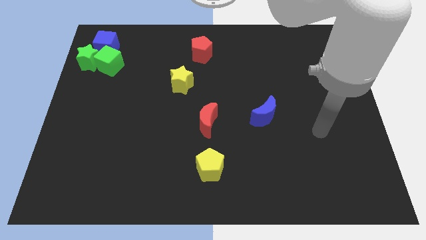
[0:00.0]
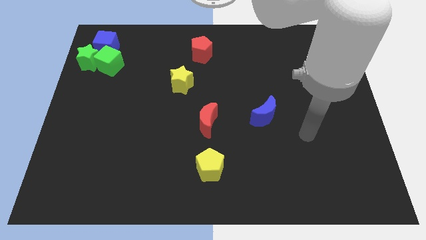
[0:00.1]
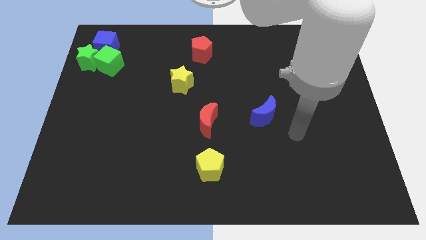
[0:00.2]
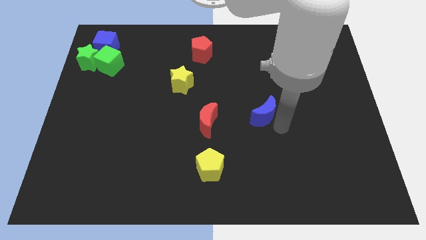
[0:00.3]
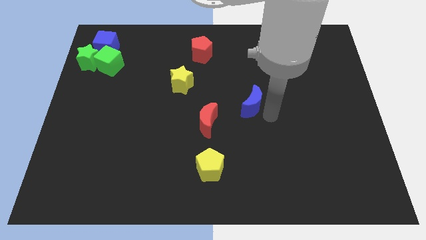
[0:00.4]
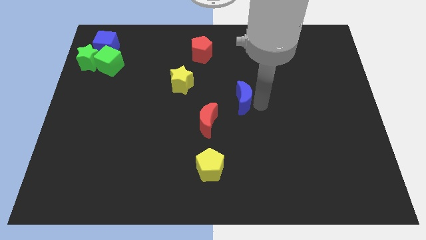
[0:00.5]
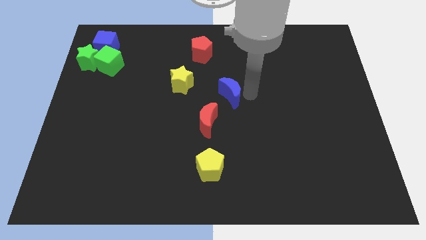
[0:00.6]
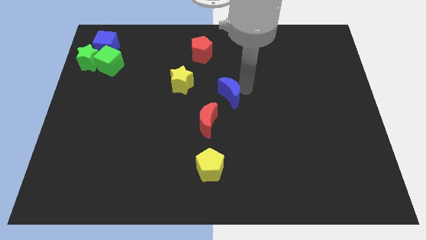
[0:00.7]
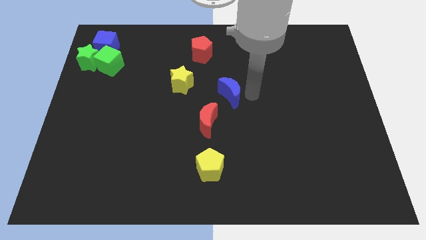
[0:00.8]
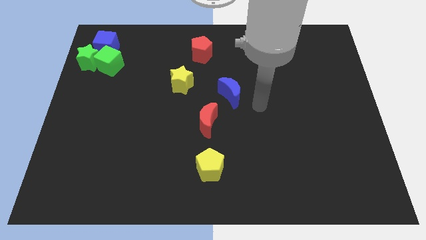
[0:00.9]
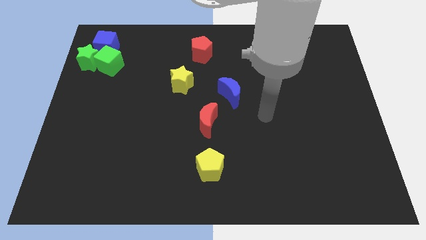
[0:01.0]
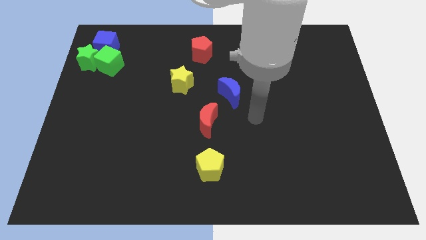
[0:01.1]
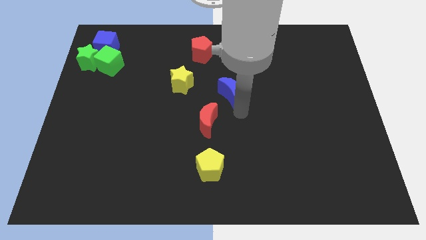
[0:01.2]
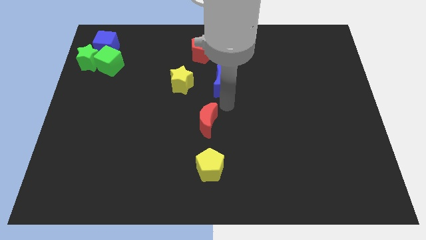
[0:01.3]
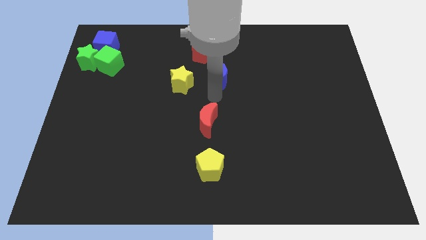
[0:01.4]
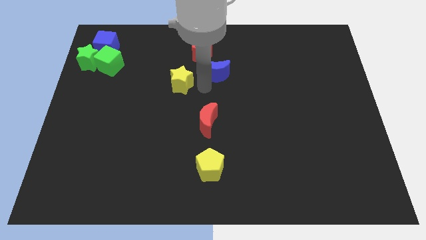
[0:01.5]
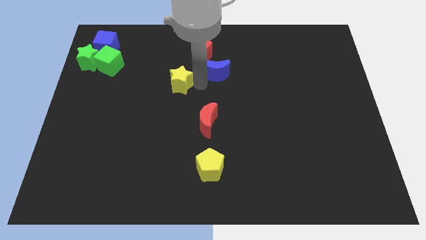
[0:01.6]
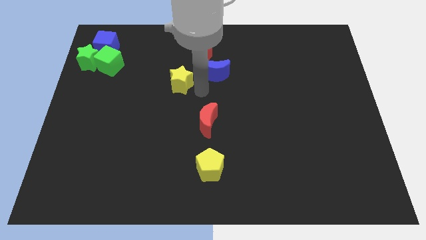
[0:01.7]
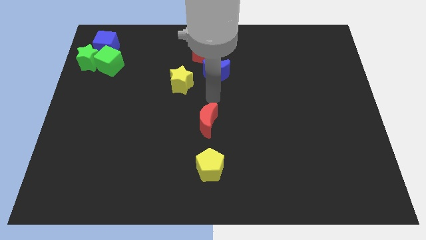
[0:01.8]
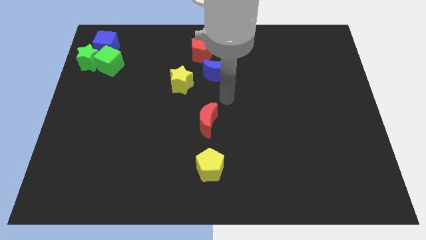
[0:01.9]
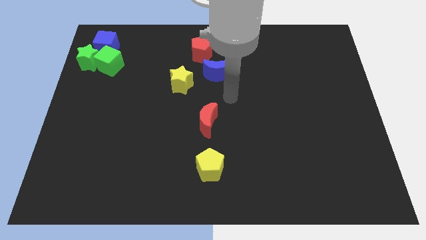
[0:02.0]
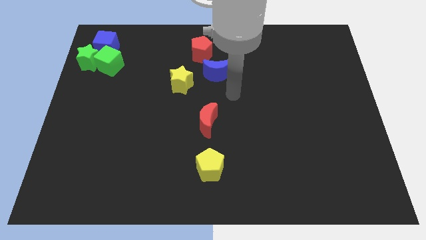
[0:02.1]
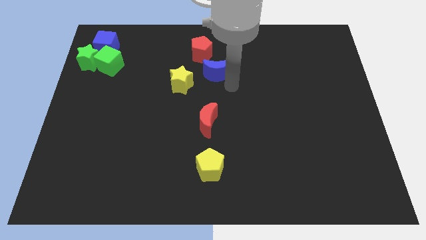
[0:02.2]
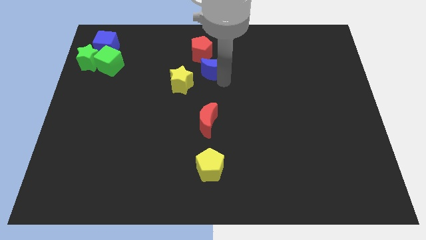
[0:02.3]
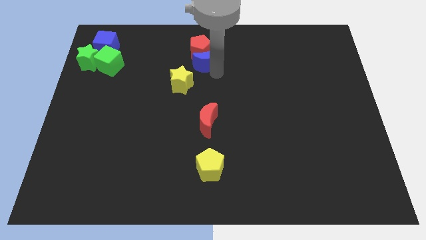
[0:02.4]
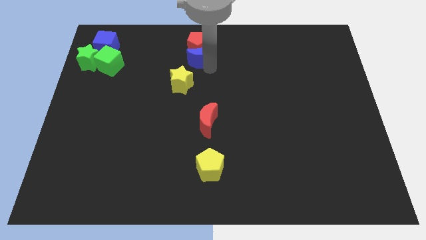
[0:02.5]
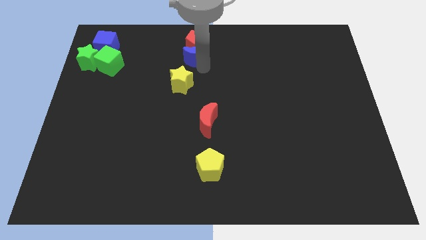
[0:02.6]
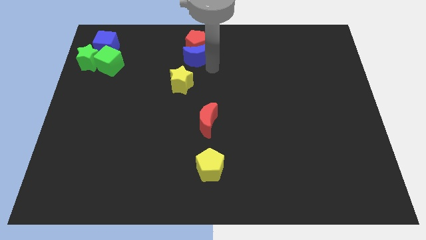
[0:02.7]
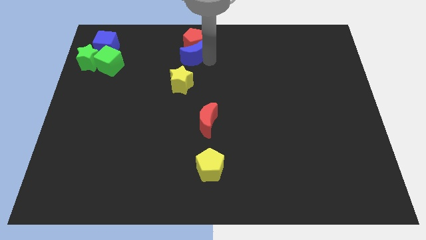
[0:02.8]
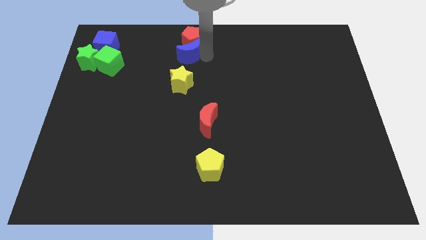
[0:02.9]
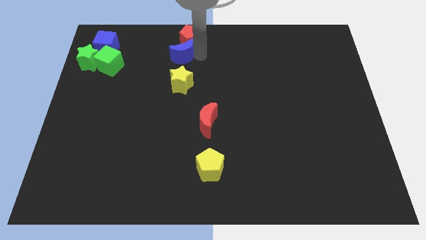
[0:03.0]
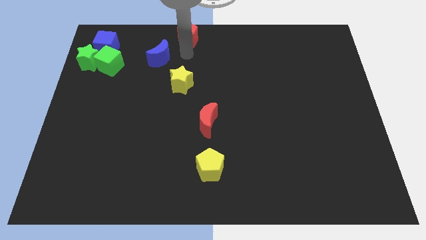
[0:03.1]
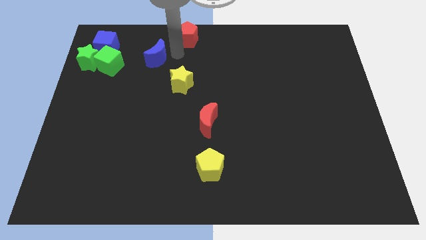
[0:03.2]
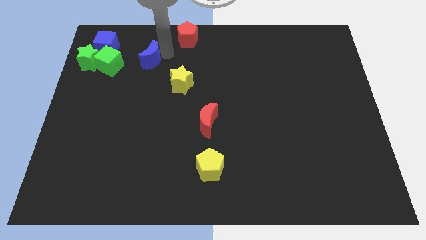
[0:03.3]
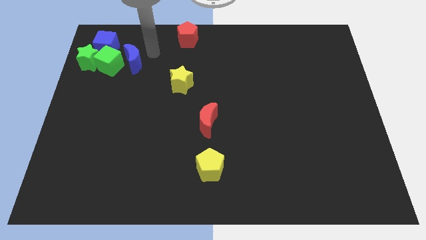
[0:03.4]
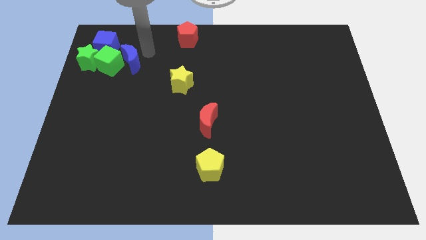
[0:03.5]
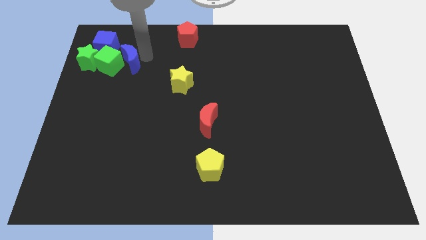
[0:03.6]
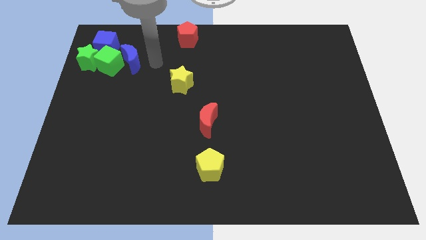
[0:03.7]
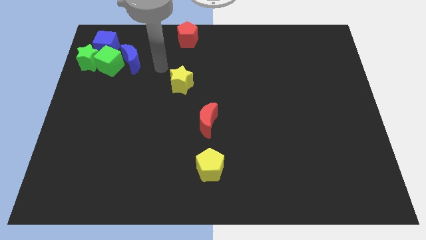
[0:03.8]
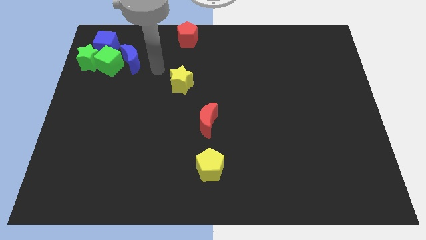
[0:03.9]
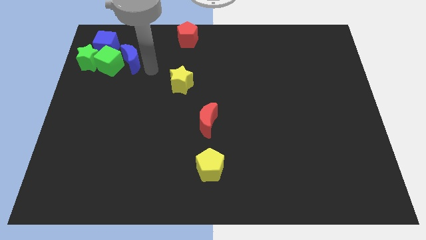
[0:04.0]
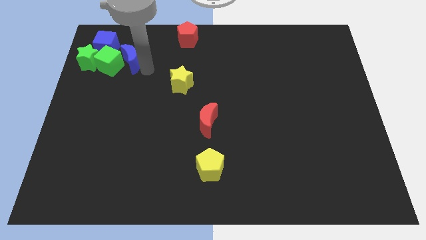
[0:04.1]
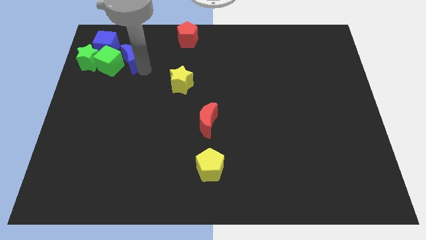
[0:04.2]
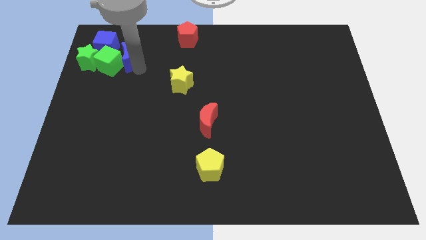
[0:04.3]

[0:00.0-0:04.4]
push the blue crescent right to the green cube

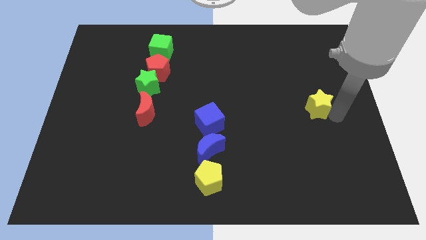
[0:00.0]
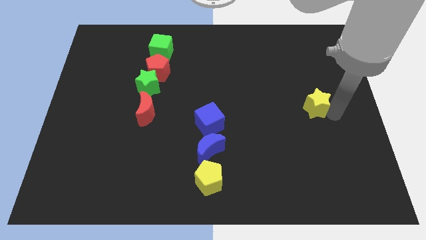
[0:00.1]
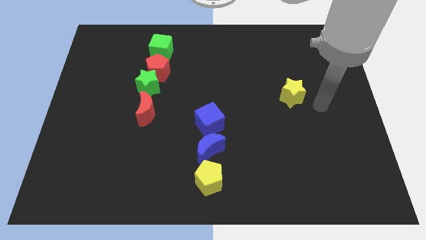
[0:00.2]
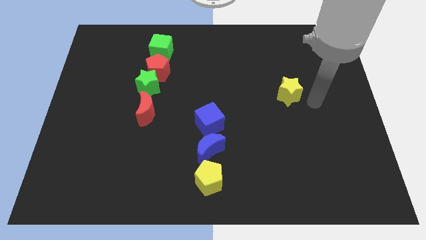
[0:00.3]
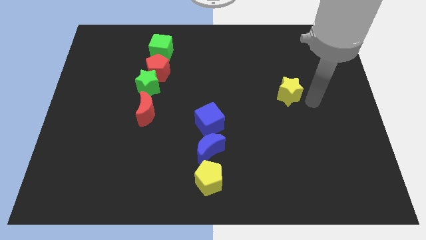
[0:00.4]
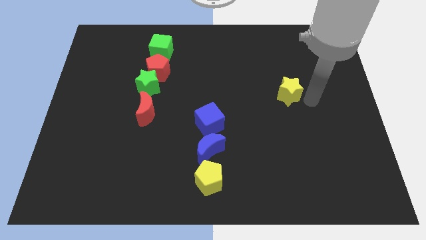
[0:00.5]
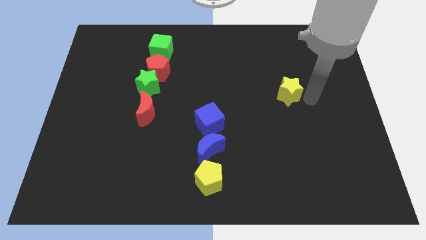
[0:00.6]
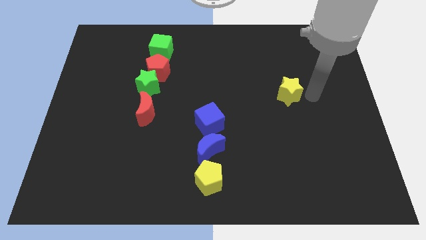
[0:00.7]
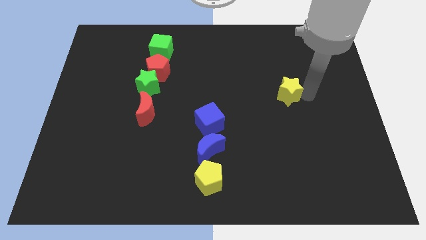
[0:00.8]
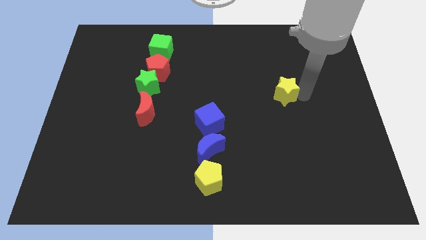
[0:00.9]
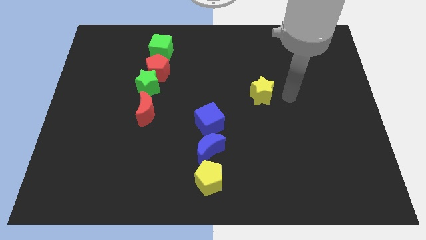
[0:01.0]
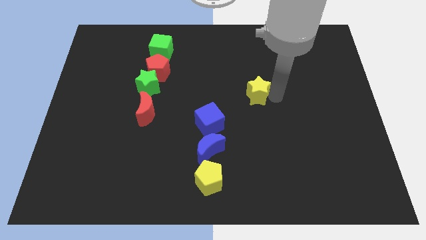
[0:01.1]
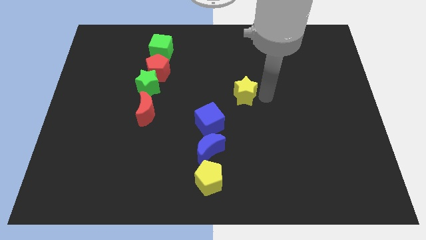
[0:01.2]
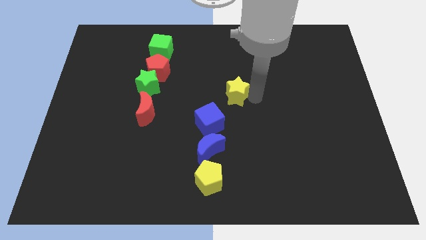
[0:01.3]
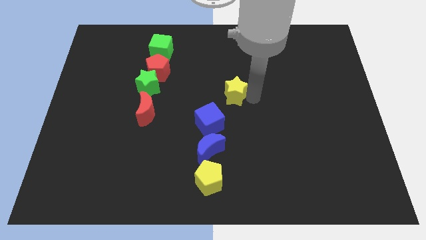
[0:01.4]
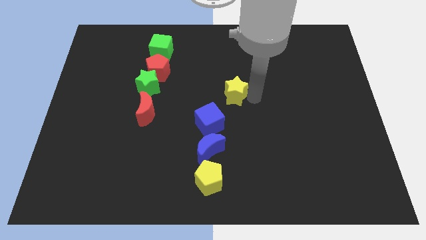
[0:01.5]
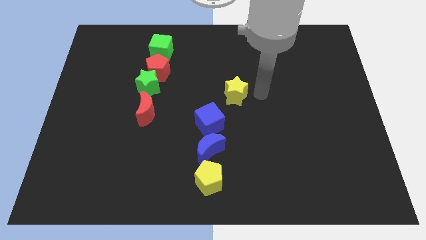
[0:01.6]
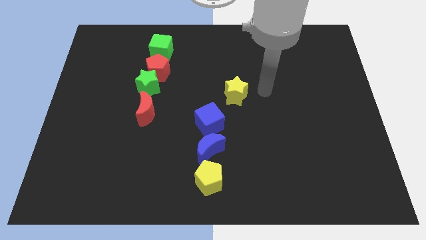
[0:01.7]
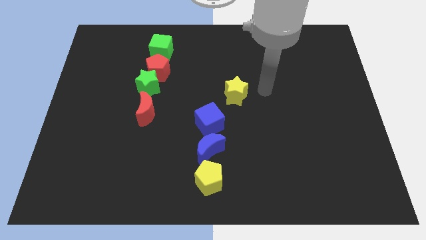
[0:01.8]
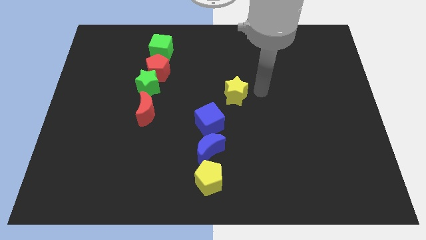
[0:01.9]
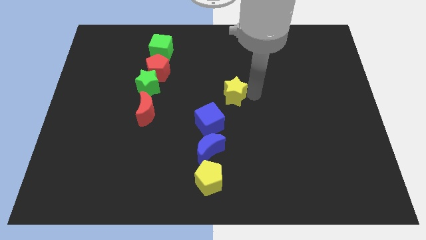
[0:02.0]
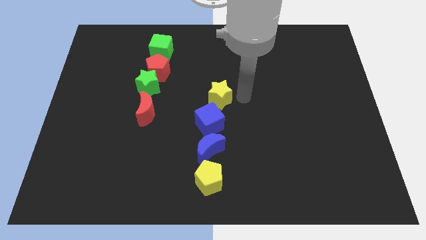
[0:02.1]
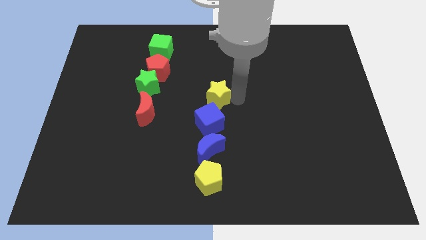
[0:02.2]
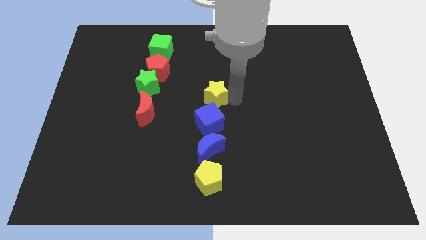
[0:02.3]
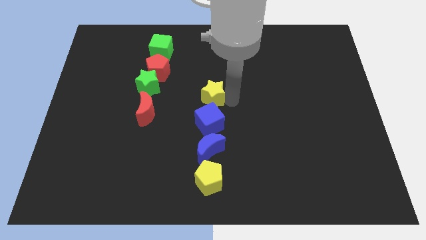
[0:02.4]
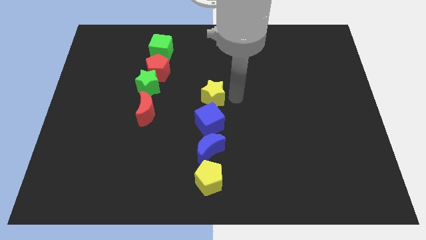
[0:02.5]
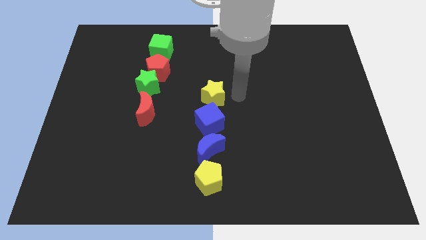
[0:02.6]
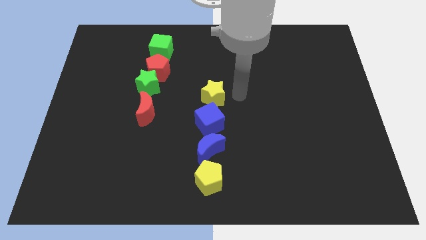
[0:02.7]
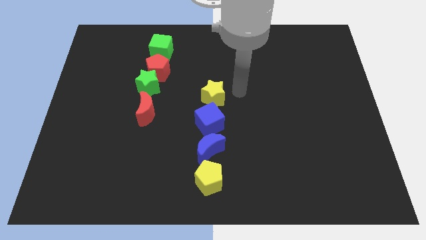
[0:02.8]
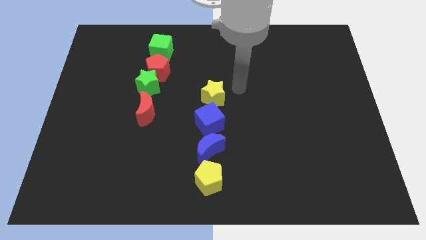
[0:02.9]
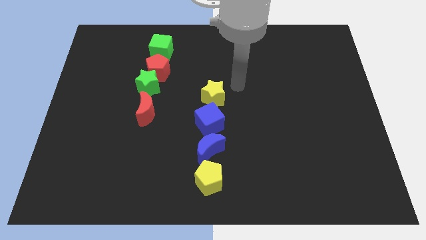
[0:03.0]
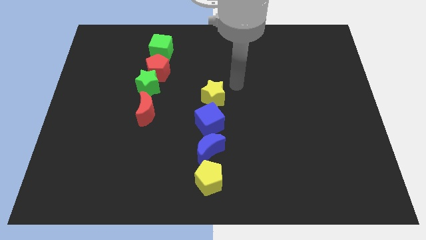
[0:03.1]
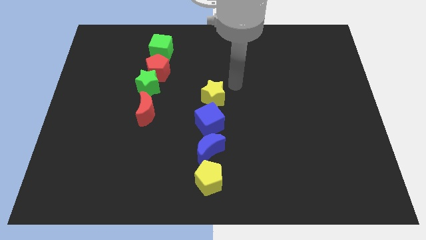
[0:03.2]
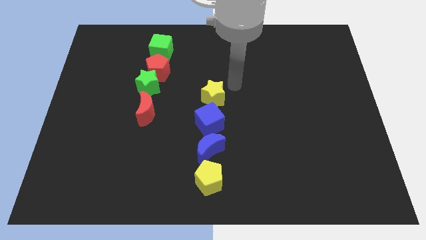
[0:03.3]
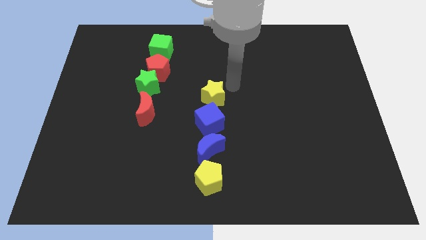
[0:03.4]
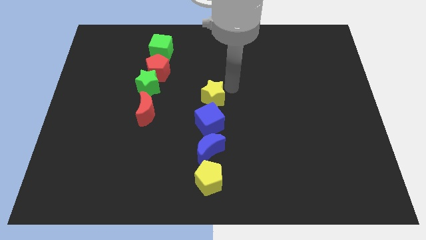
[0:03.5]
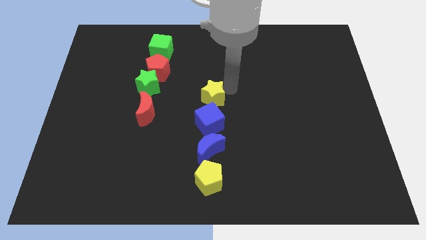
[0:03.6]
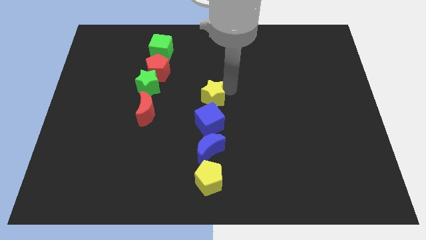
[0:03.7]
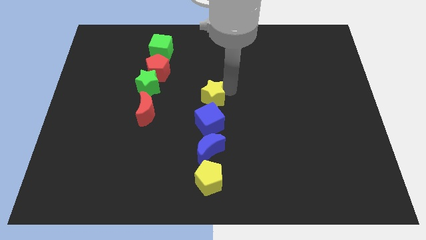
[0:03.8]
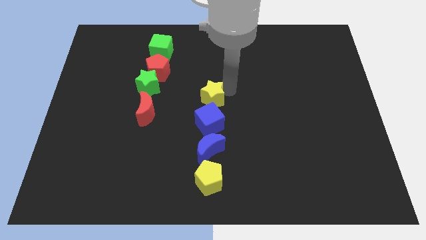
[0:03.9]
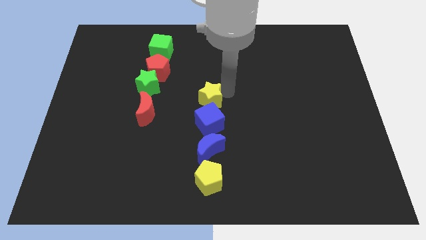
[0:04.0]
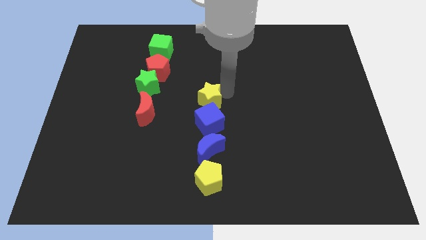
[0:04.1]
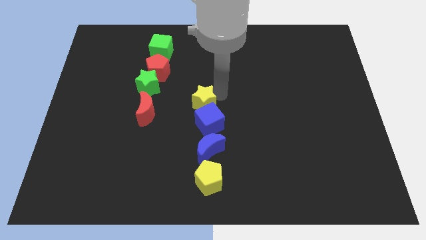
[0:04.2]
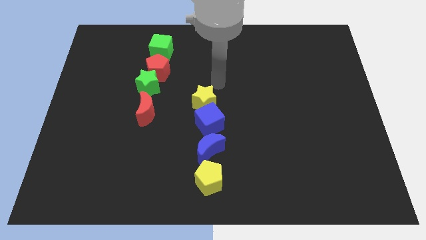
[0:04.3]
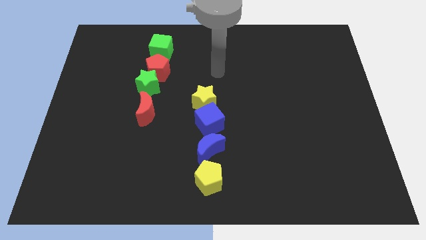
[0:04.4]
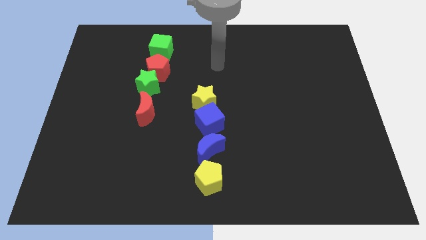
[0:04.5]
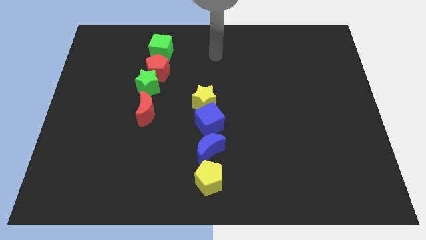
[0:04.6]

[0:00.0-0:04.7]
place the yellow star above the blue cube

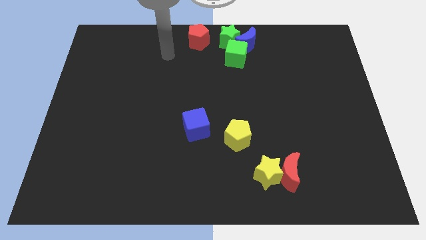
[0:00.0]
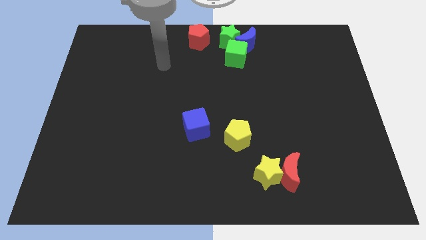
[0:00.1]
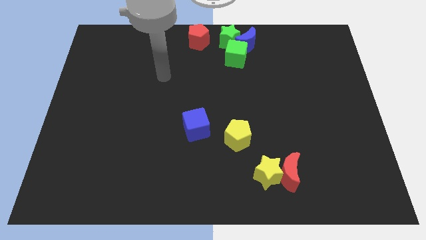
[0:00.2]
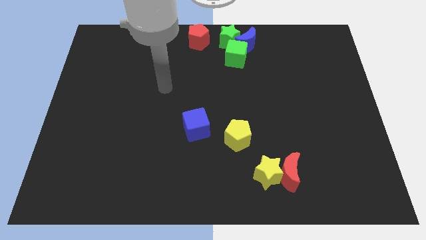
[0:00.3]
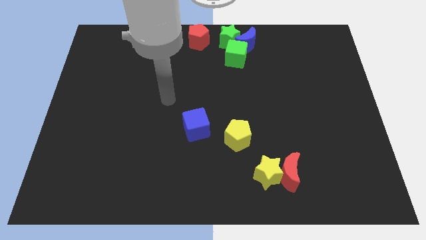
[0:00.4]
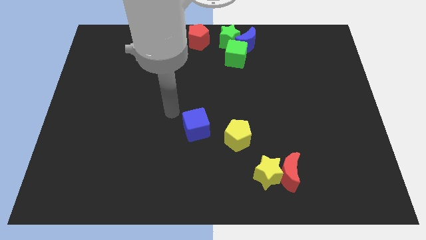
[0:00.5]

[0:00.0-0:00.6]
move your arm towards the bottom of the board
